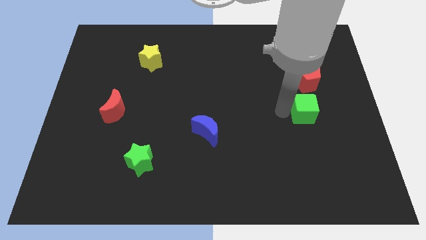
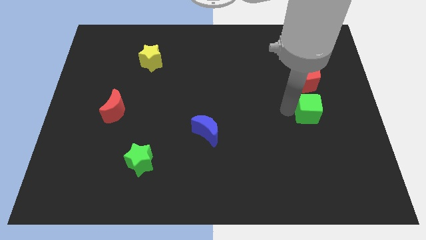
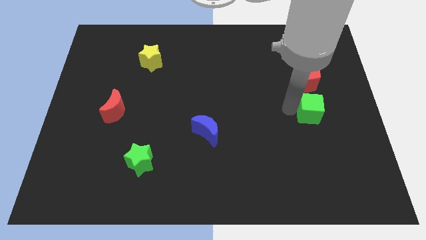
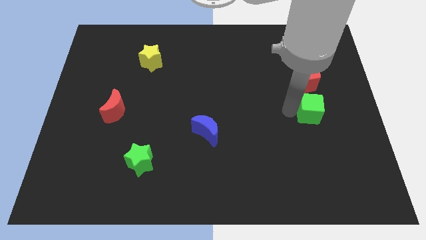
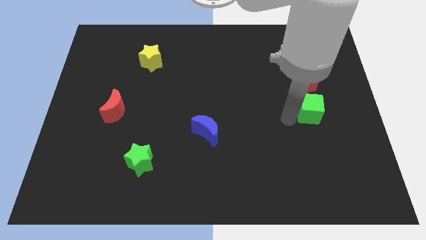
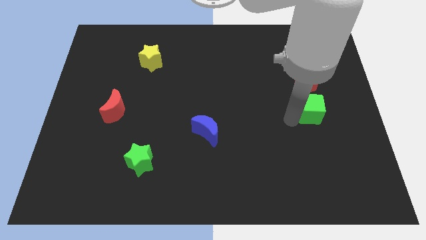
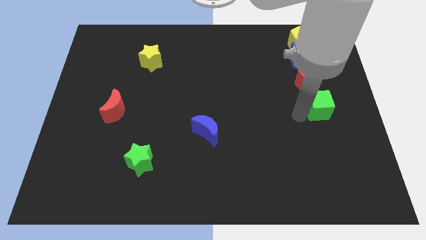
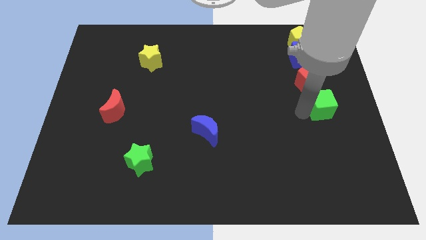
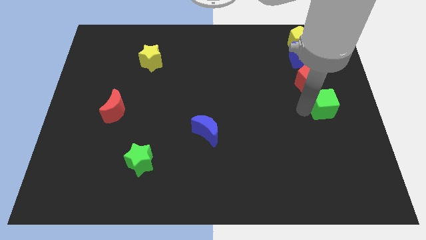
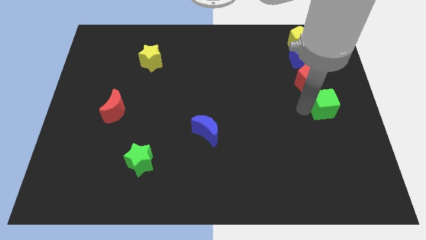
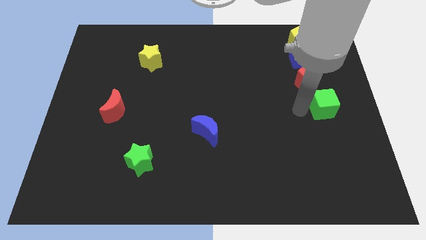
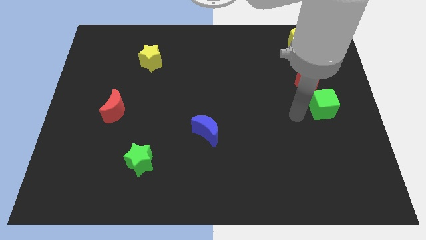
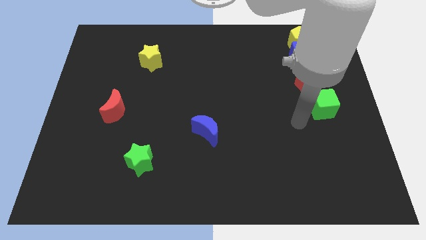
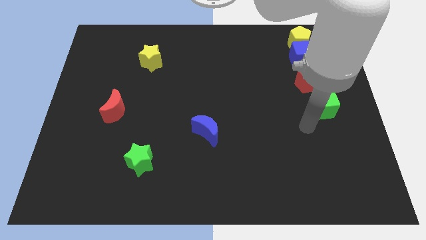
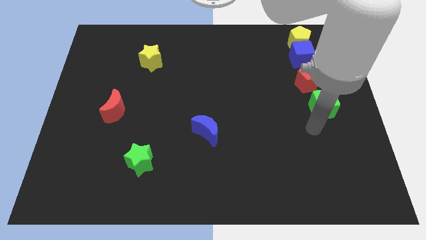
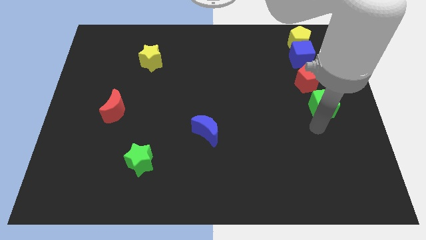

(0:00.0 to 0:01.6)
push the green cube down to the red pentagon

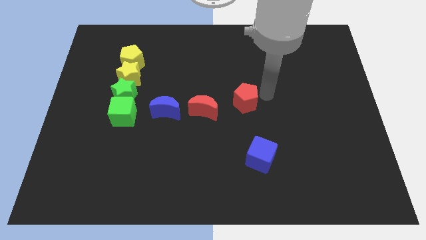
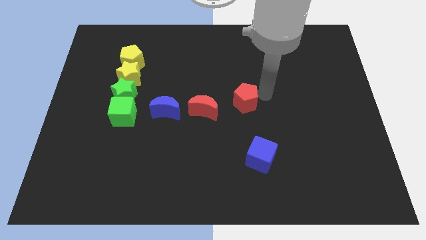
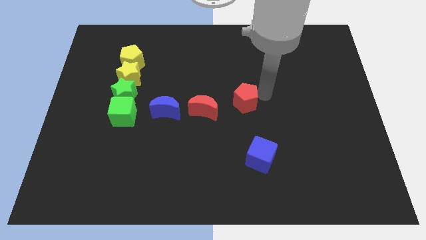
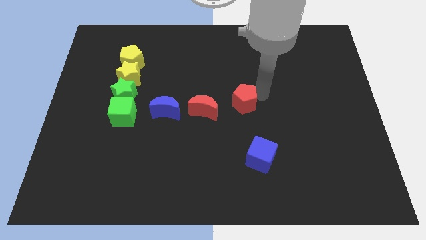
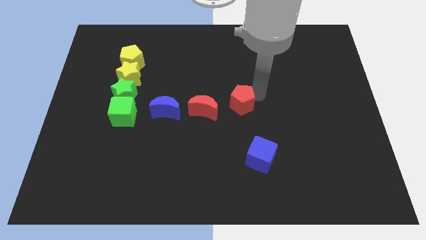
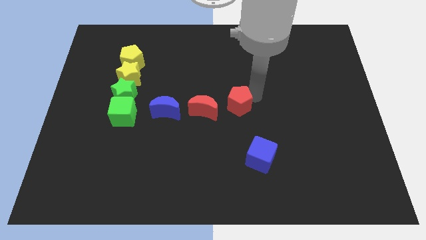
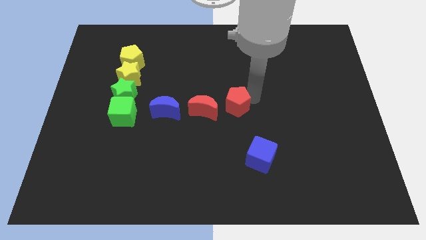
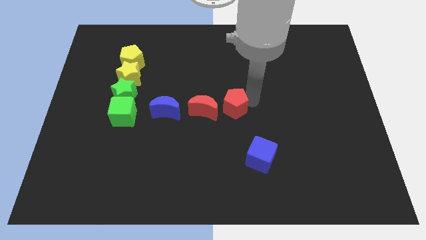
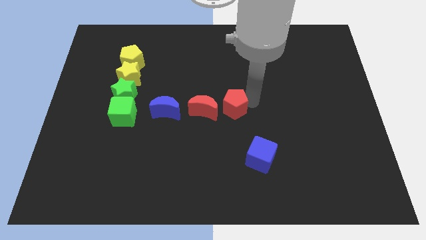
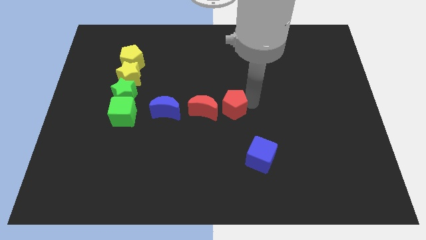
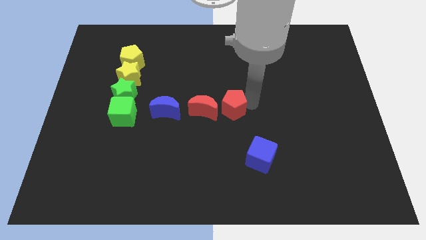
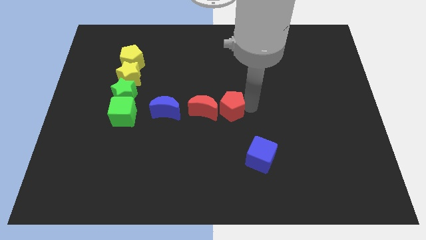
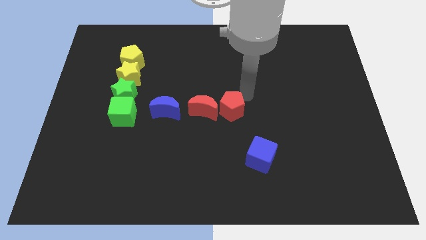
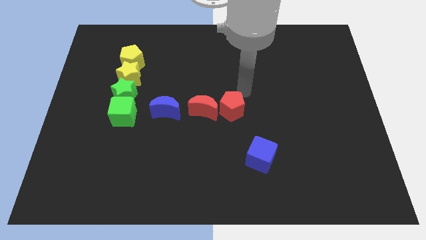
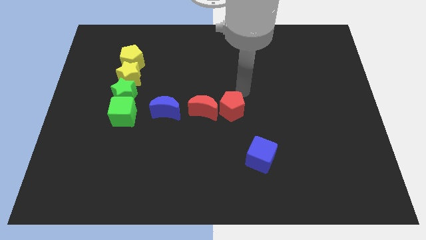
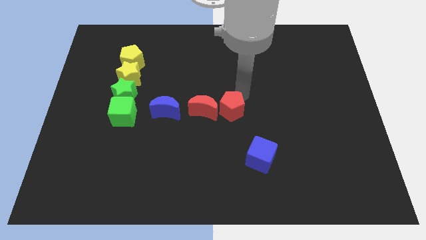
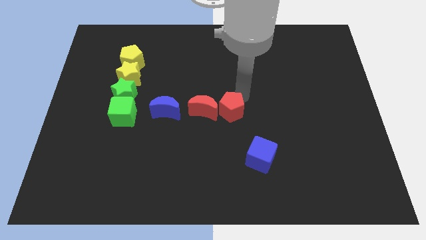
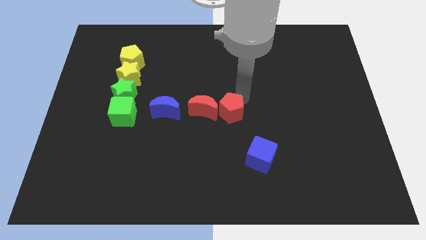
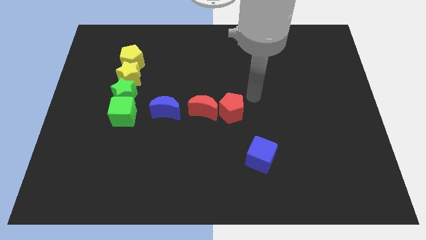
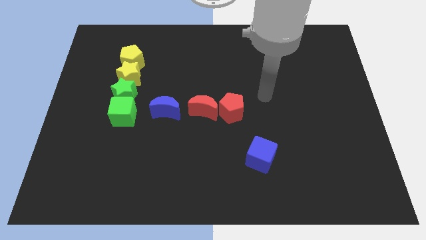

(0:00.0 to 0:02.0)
place the red pentagon right to the red crescent

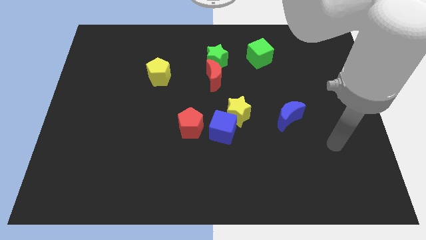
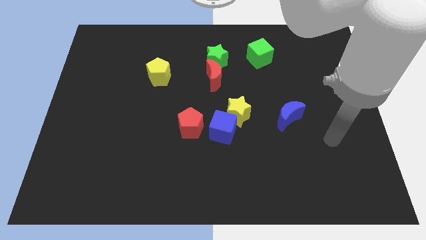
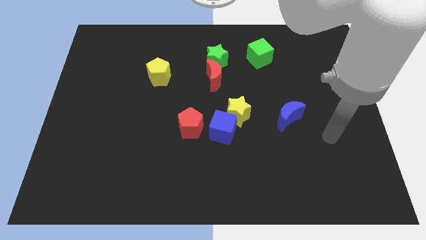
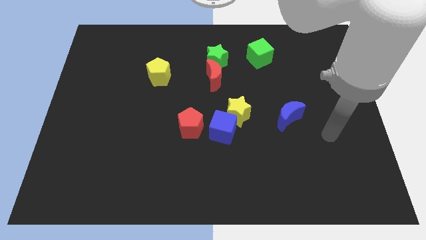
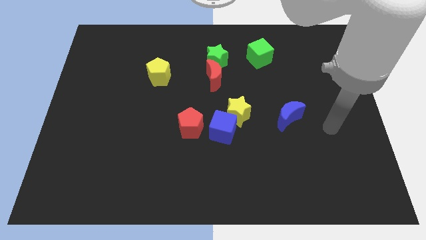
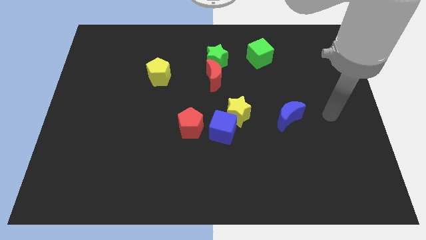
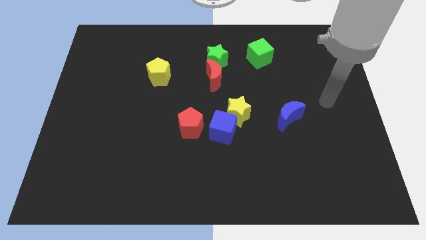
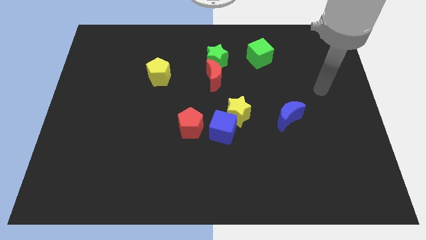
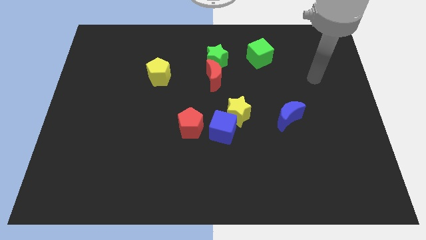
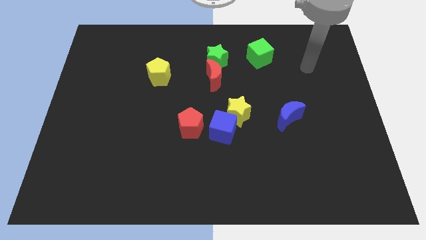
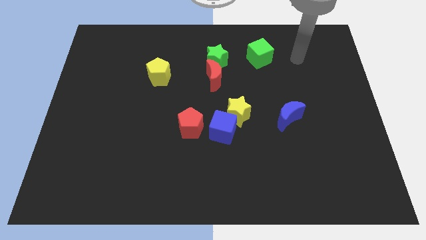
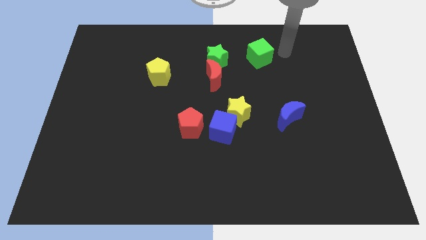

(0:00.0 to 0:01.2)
move the arm towards the top center of the board

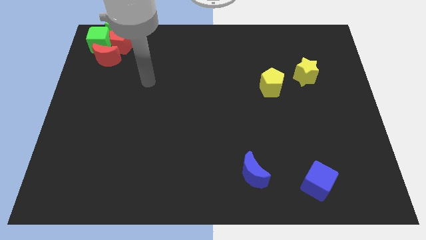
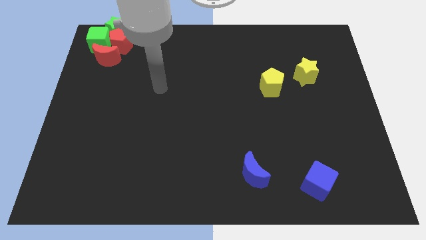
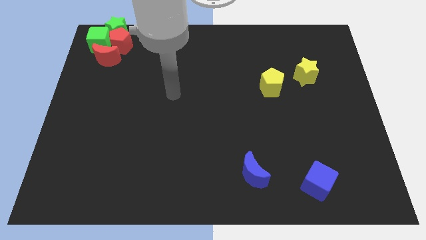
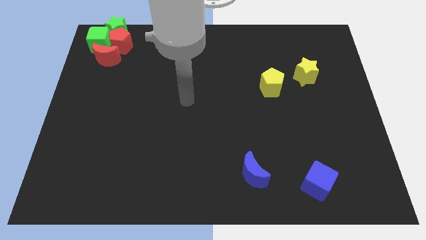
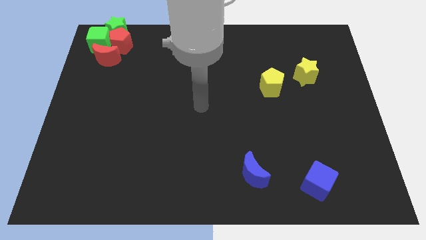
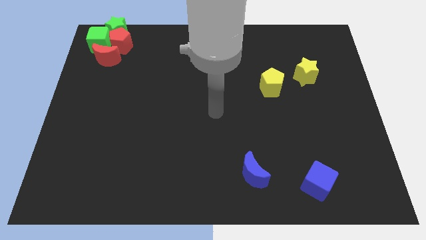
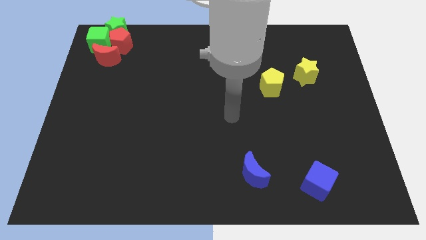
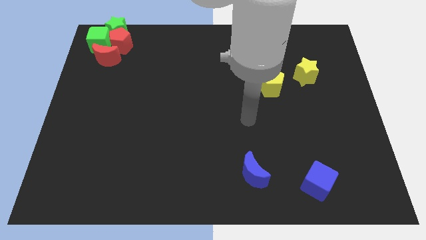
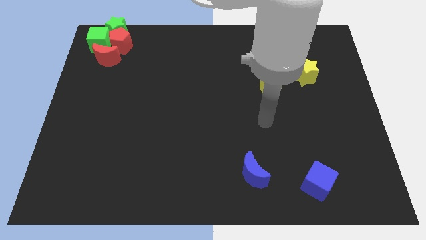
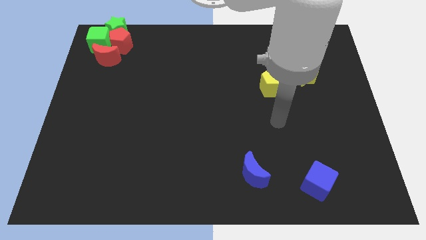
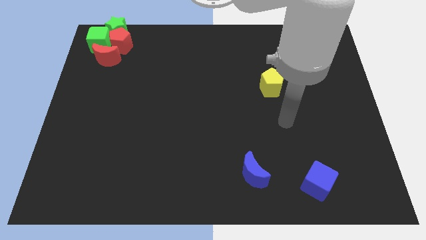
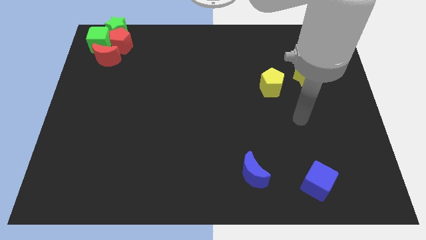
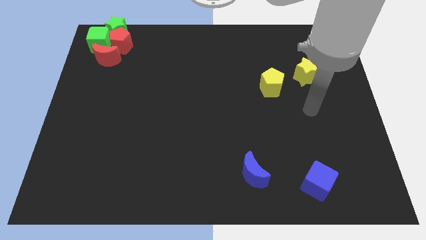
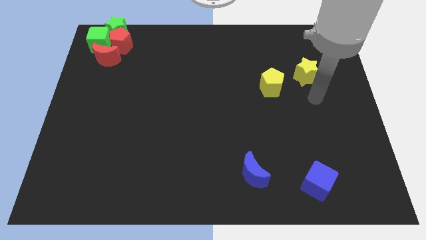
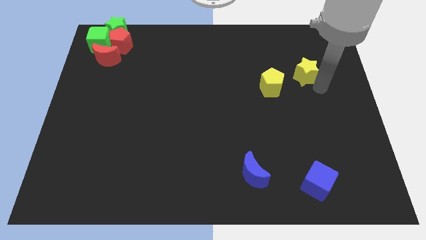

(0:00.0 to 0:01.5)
move your arm towards the yellow star

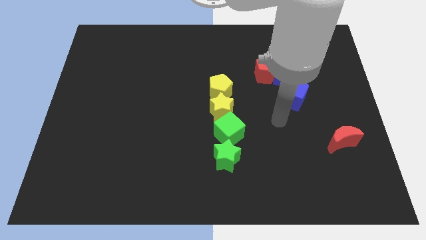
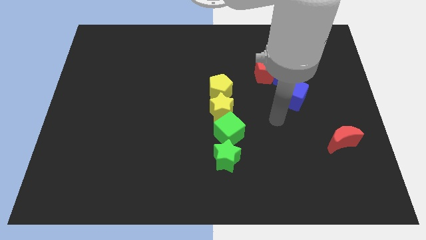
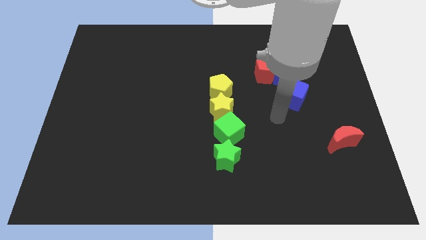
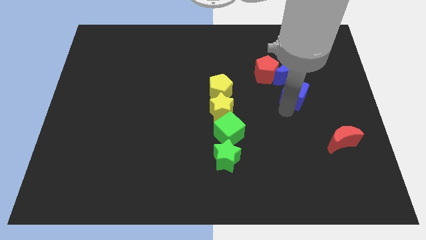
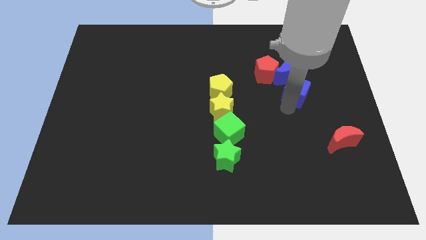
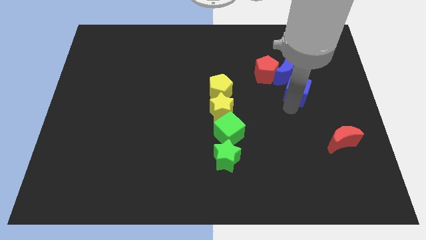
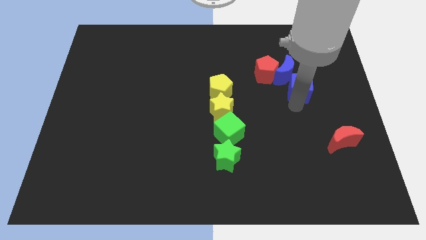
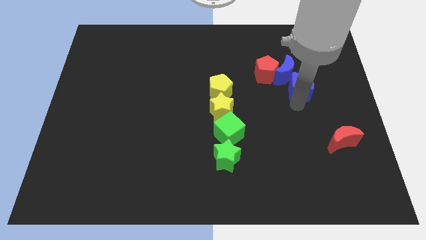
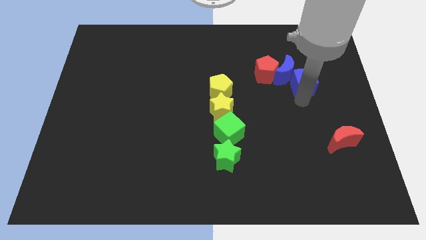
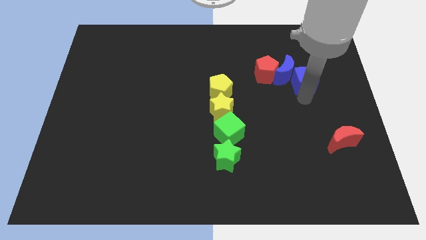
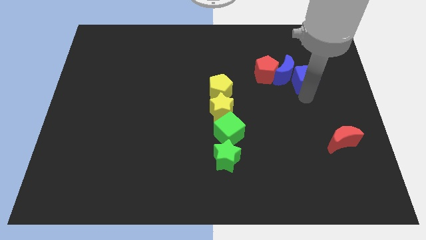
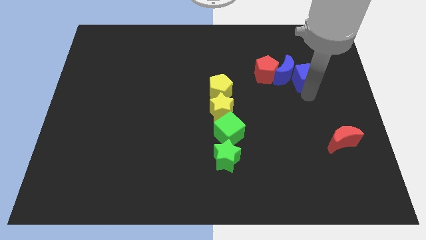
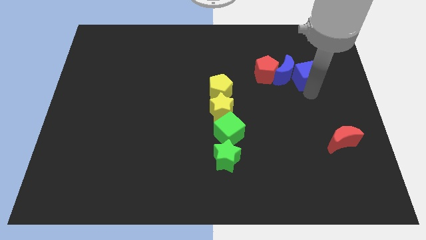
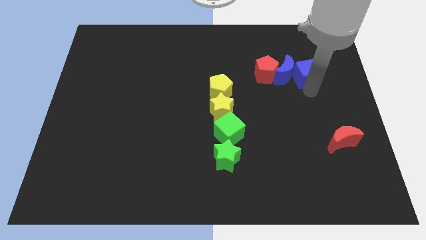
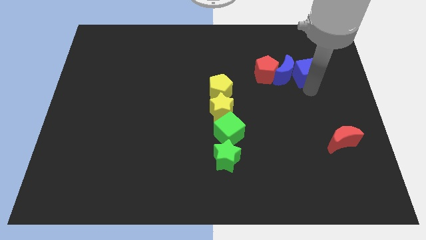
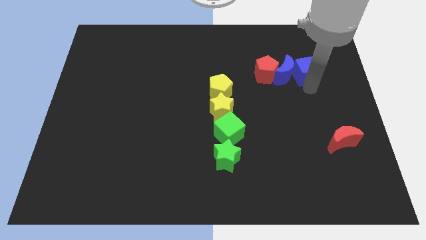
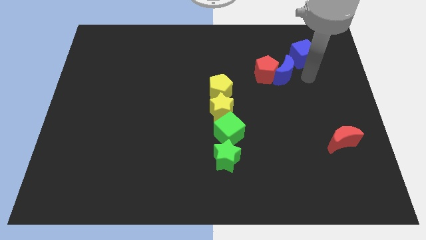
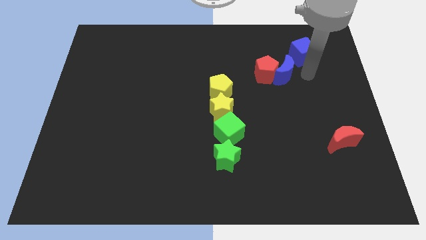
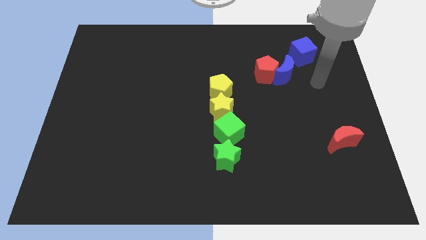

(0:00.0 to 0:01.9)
move the blue cube slightly up

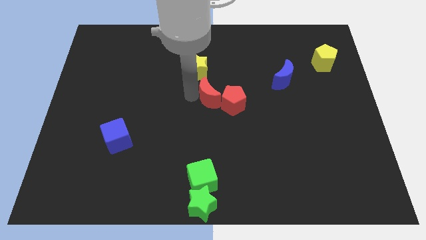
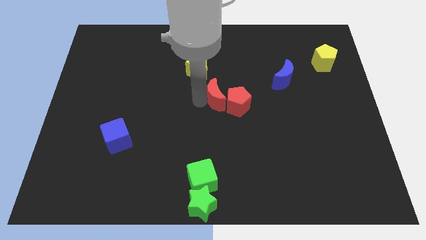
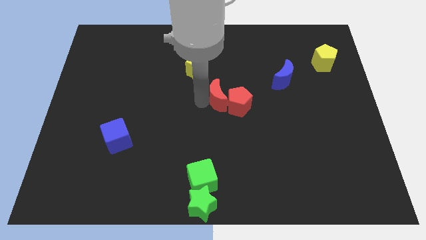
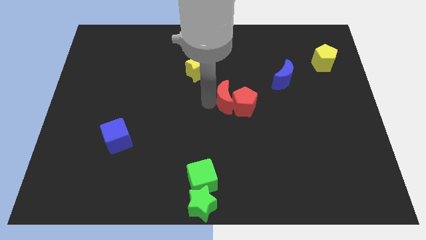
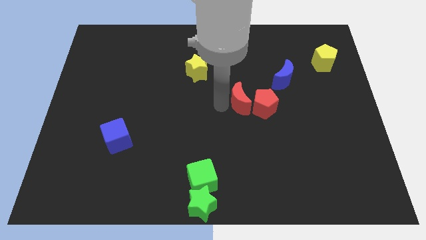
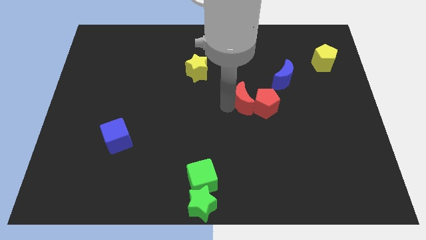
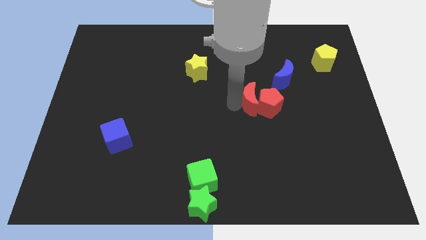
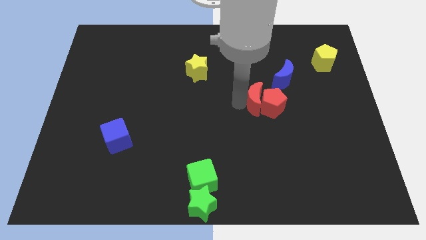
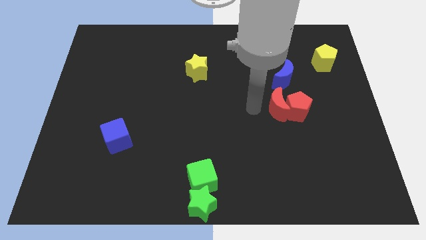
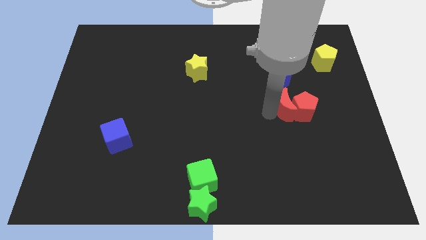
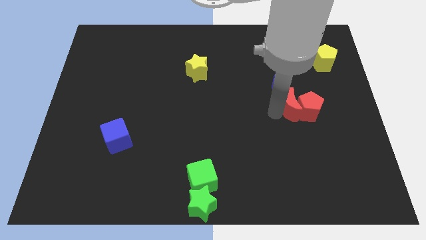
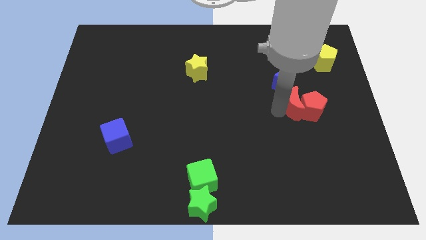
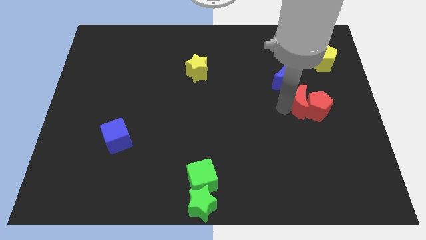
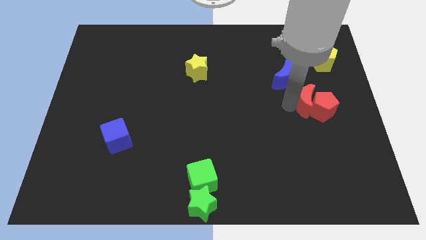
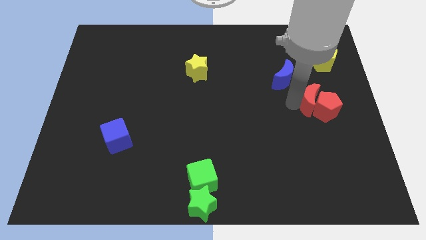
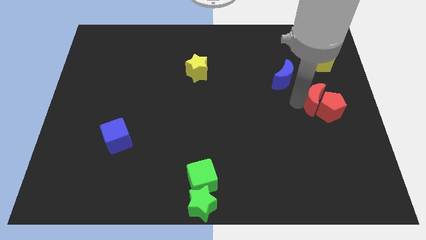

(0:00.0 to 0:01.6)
place the group of red blocks below the yellow pentagon
